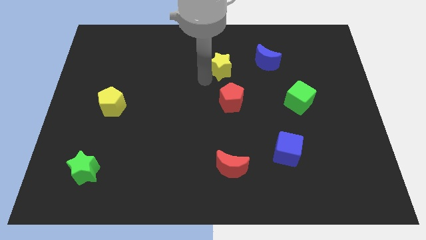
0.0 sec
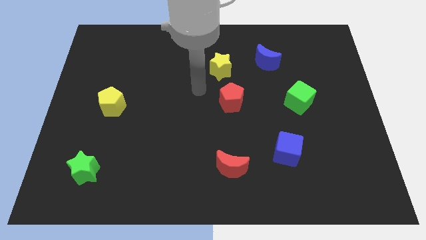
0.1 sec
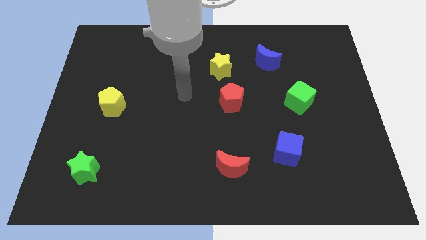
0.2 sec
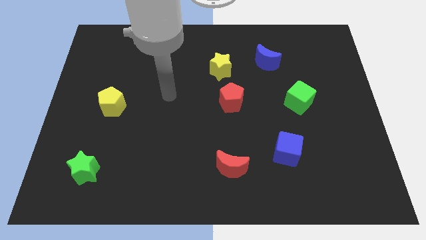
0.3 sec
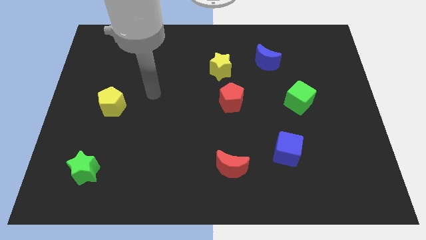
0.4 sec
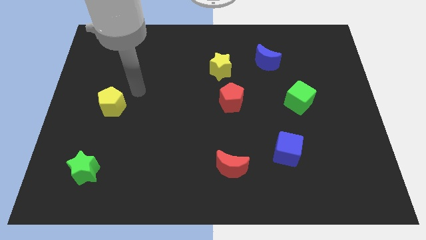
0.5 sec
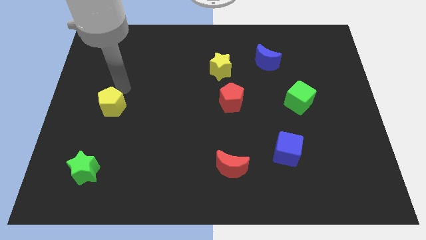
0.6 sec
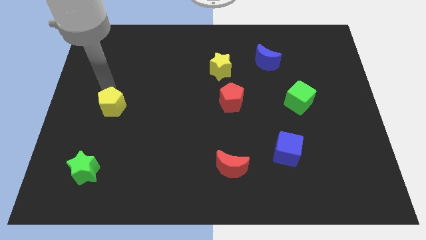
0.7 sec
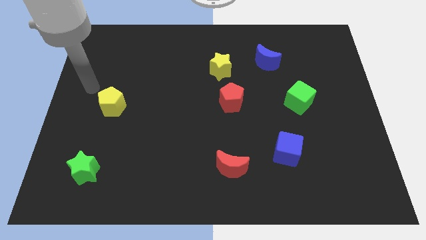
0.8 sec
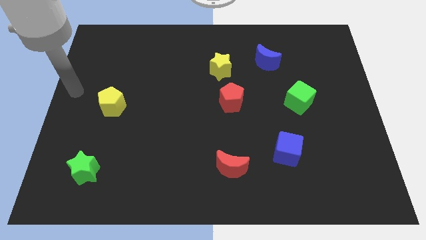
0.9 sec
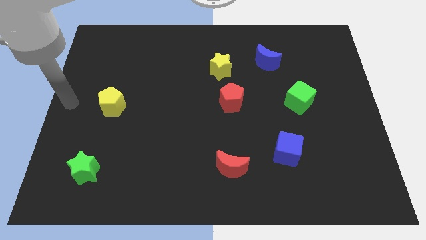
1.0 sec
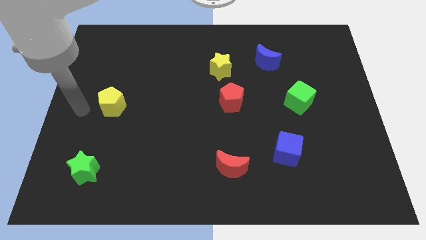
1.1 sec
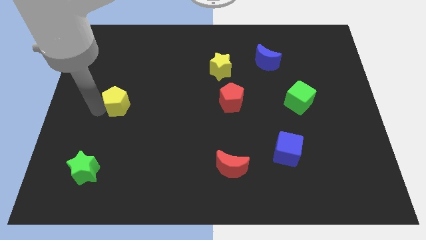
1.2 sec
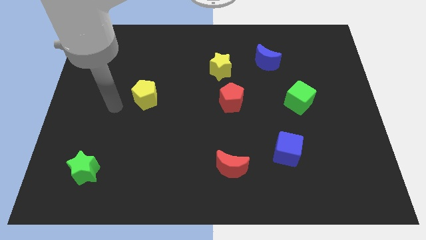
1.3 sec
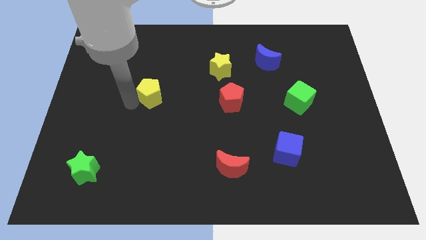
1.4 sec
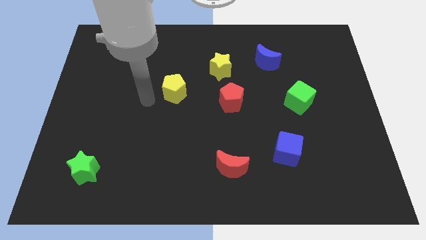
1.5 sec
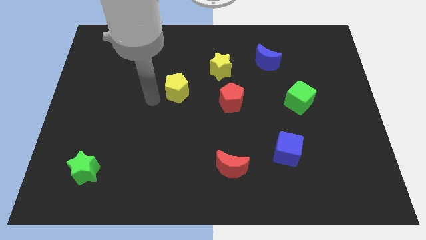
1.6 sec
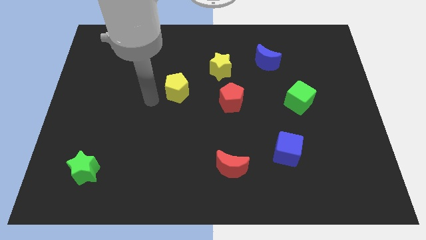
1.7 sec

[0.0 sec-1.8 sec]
place the yellow pentagon diagonal to the yellow star

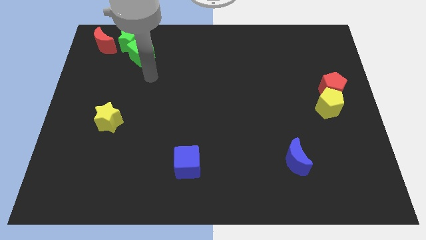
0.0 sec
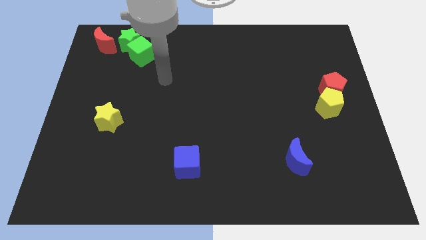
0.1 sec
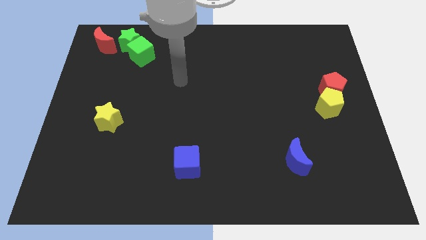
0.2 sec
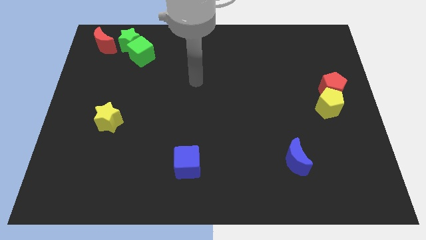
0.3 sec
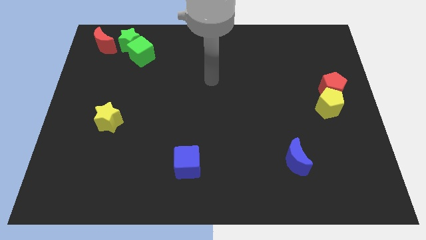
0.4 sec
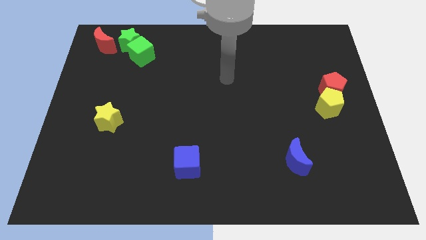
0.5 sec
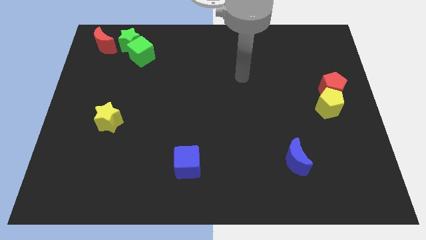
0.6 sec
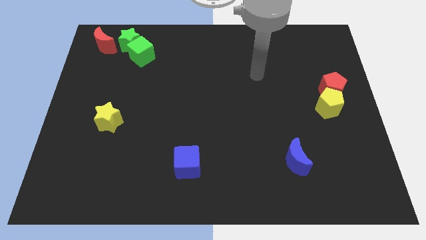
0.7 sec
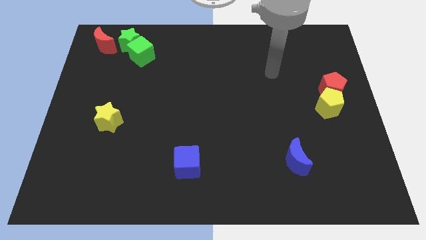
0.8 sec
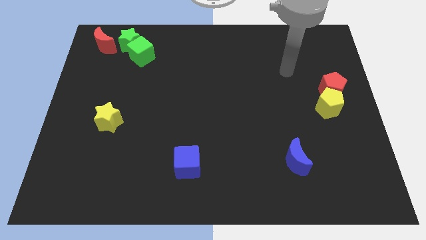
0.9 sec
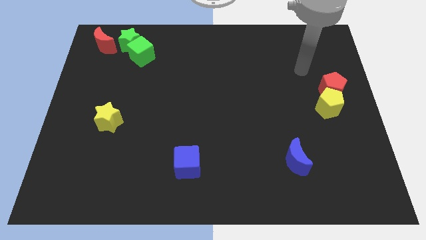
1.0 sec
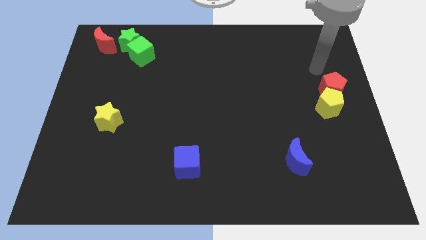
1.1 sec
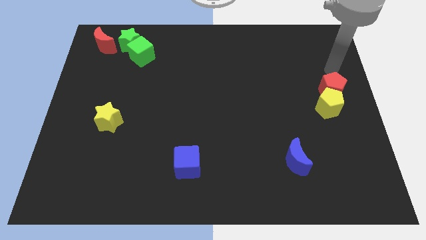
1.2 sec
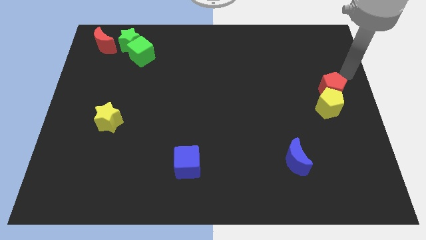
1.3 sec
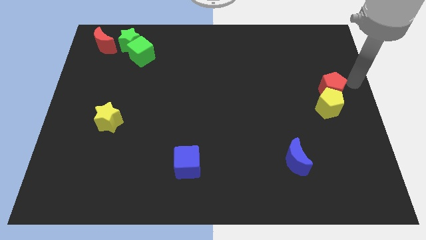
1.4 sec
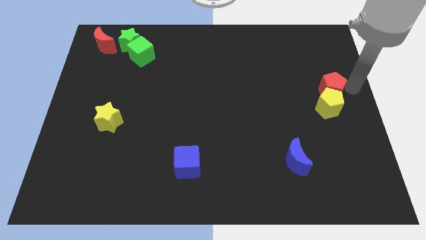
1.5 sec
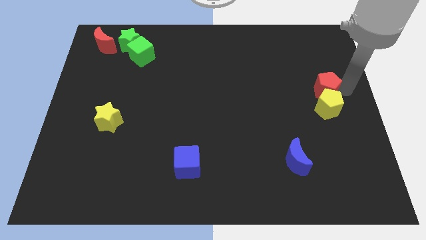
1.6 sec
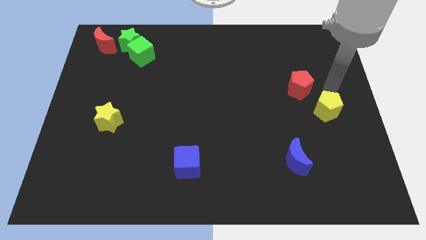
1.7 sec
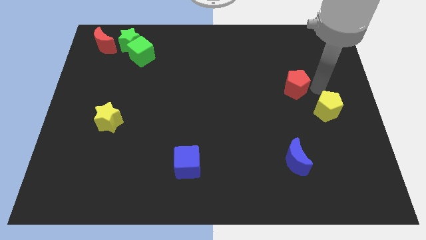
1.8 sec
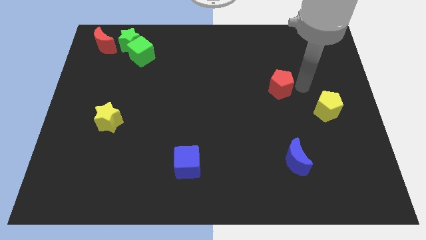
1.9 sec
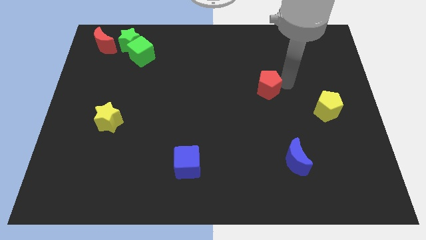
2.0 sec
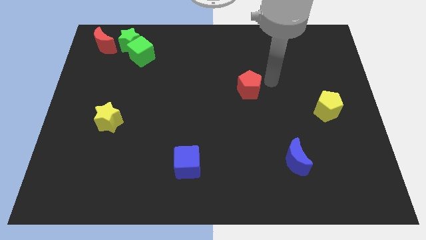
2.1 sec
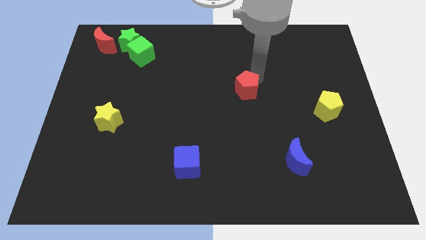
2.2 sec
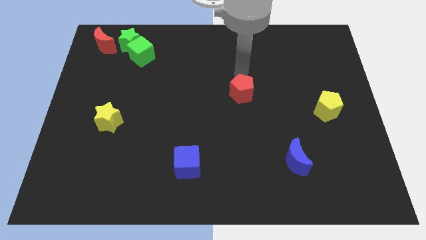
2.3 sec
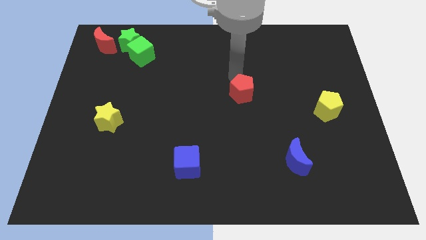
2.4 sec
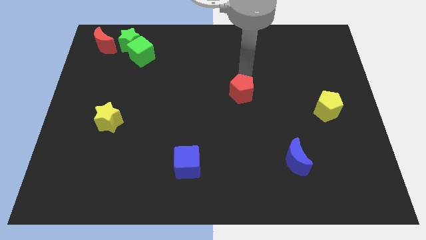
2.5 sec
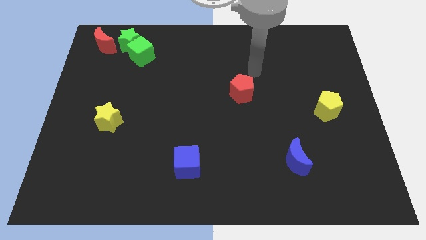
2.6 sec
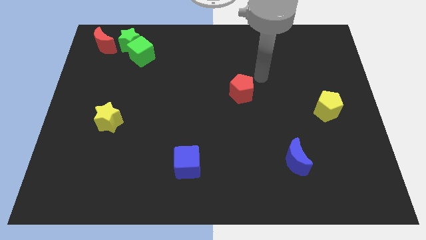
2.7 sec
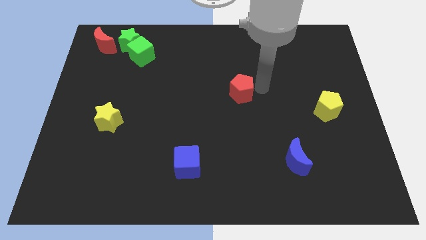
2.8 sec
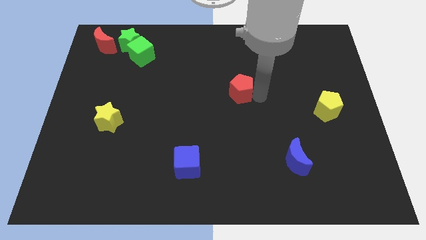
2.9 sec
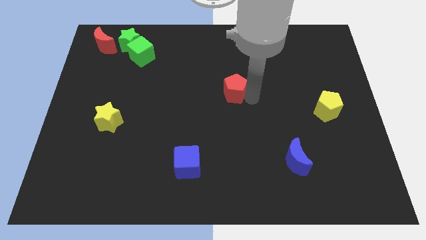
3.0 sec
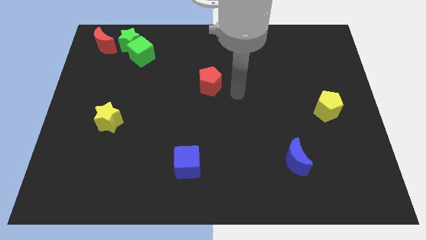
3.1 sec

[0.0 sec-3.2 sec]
push the red pentagon to the centre of the board

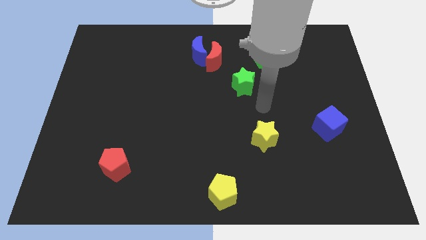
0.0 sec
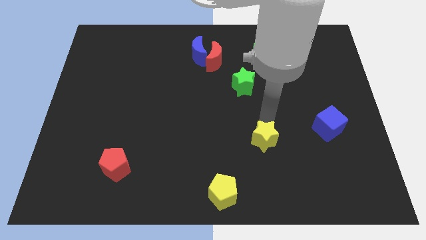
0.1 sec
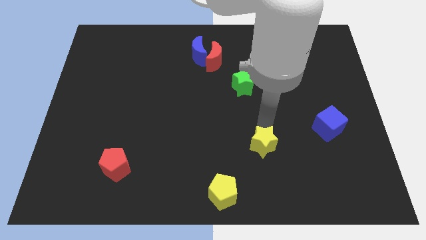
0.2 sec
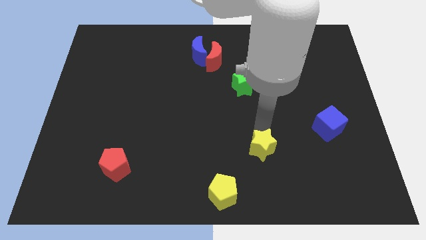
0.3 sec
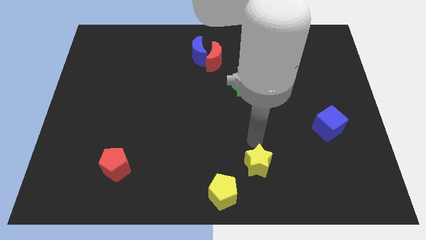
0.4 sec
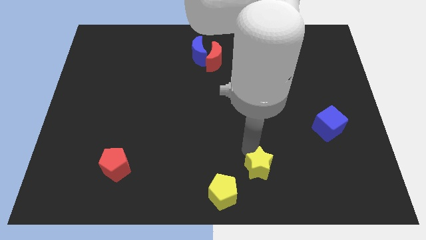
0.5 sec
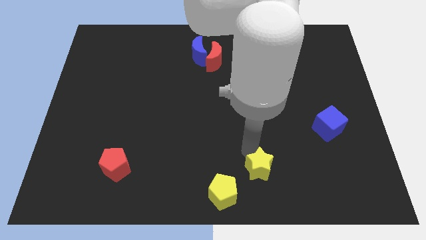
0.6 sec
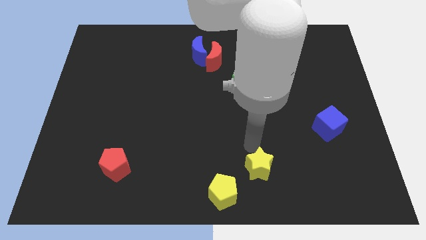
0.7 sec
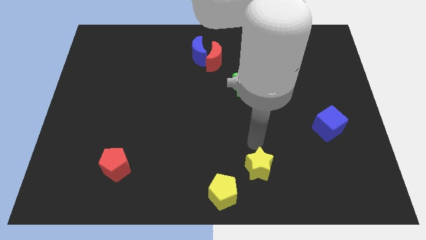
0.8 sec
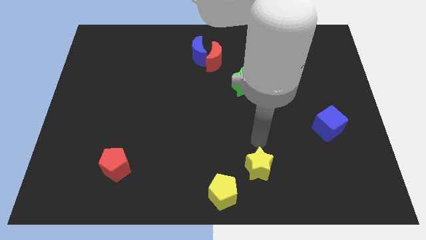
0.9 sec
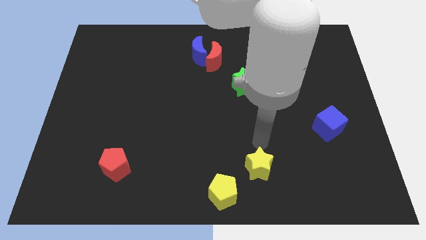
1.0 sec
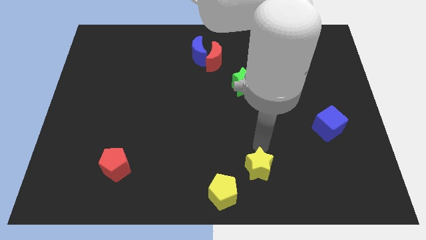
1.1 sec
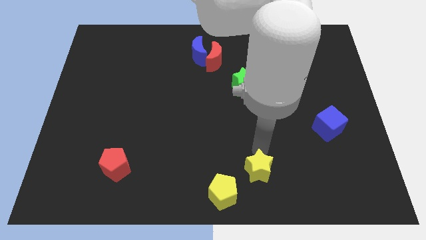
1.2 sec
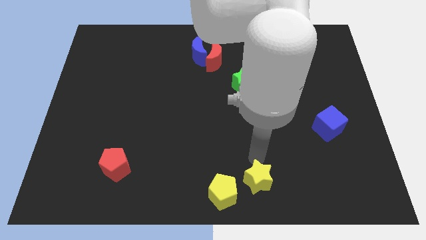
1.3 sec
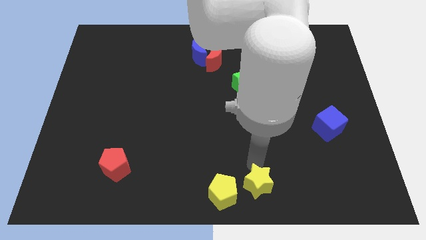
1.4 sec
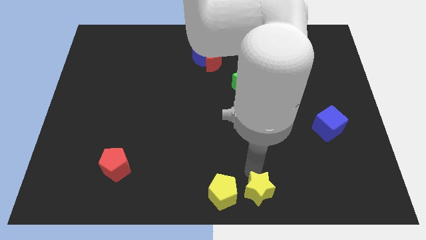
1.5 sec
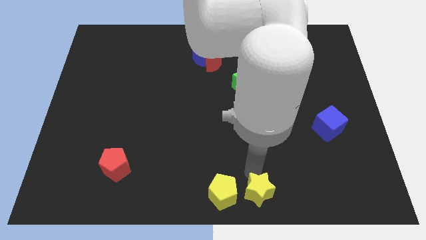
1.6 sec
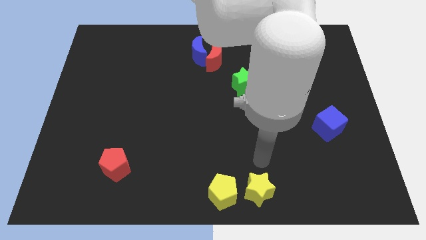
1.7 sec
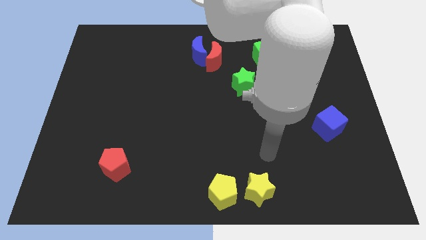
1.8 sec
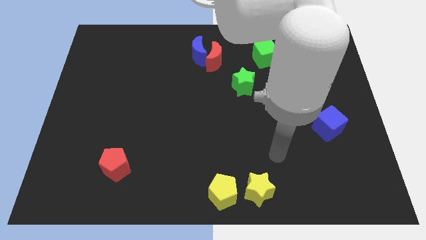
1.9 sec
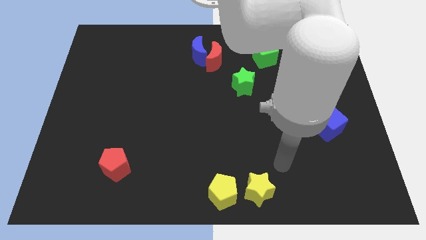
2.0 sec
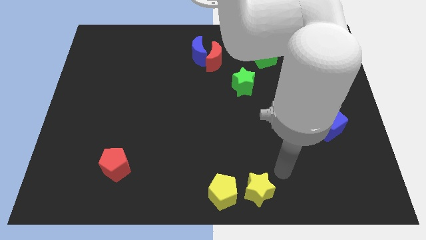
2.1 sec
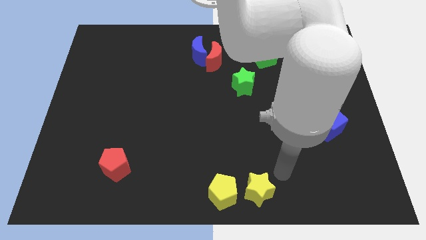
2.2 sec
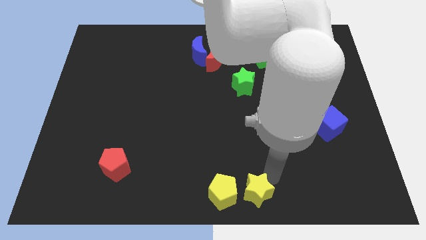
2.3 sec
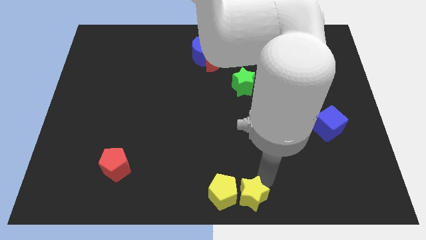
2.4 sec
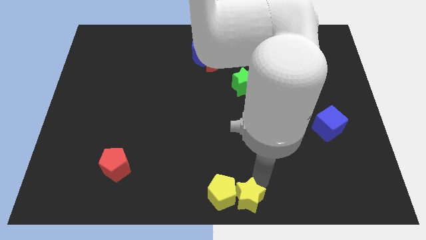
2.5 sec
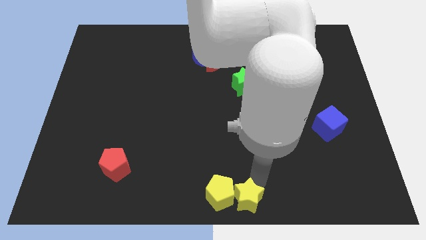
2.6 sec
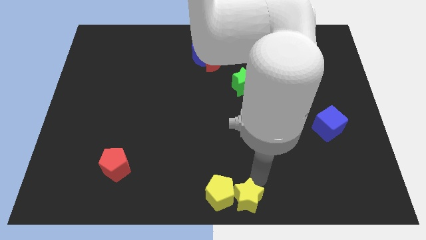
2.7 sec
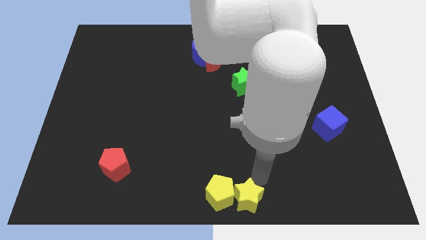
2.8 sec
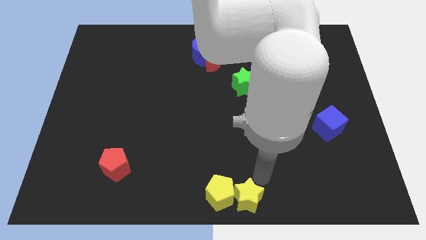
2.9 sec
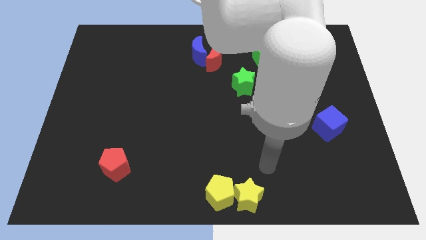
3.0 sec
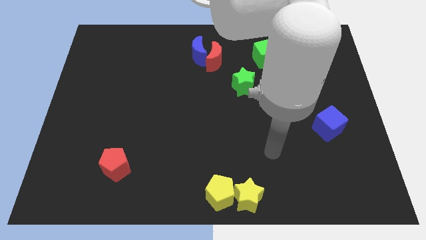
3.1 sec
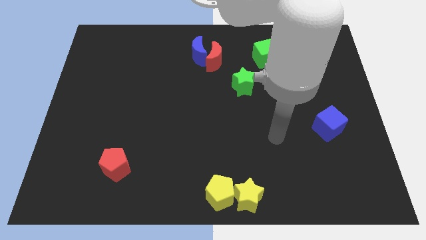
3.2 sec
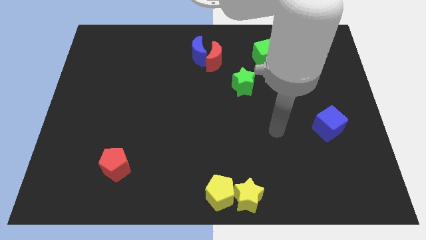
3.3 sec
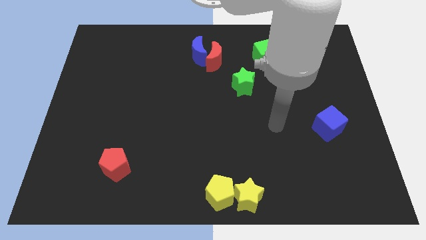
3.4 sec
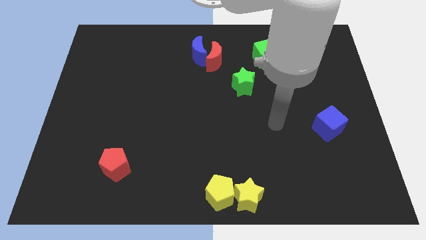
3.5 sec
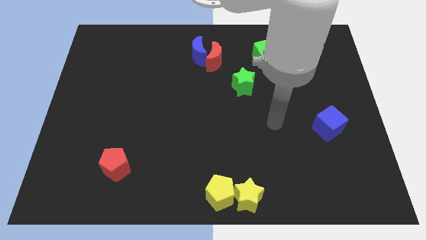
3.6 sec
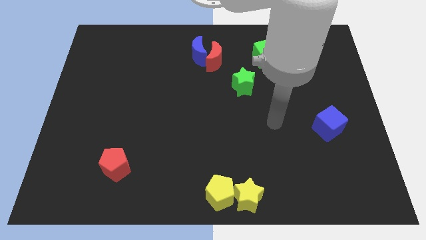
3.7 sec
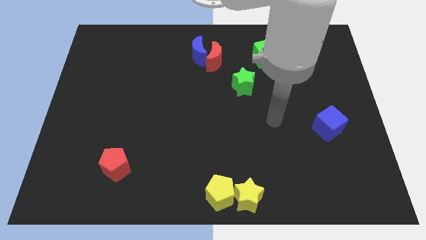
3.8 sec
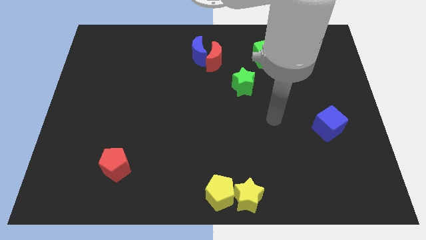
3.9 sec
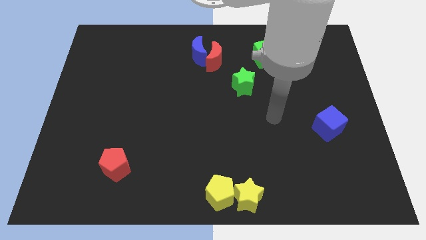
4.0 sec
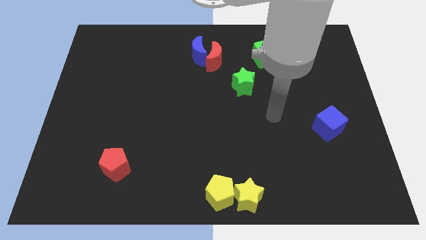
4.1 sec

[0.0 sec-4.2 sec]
push the yellow star into the yellow pentagon
